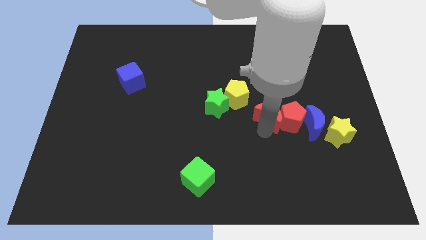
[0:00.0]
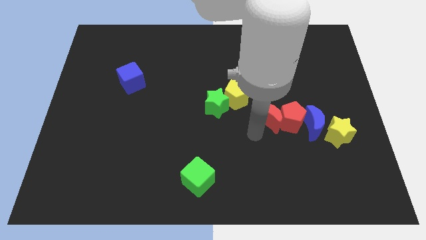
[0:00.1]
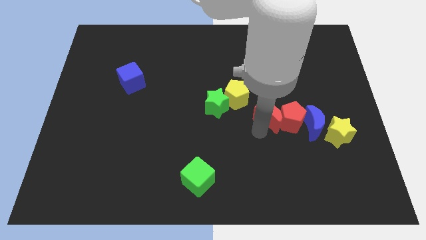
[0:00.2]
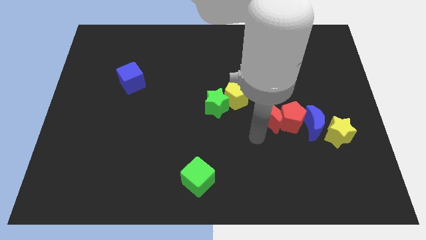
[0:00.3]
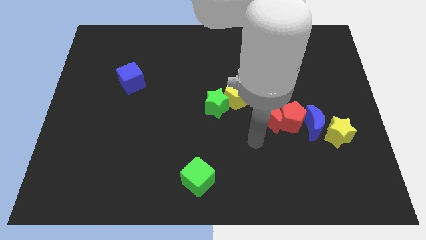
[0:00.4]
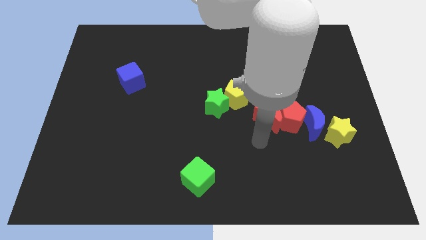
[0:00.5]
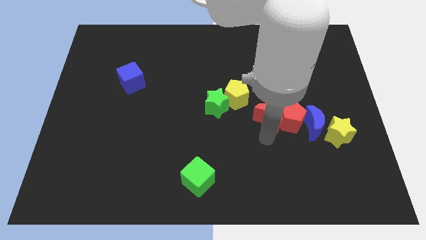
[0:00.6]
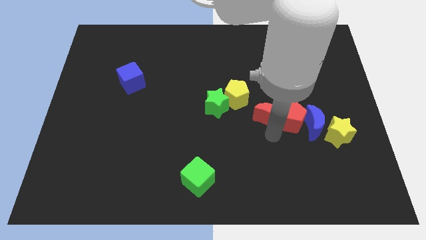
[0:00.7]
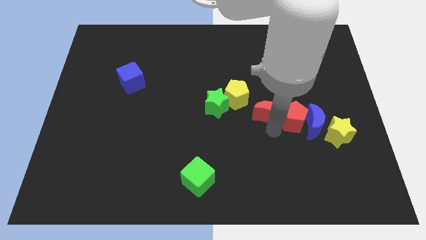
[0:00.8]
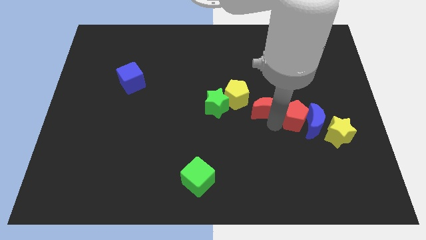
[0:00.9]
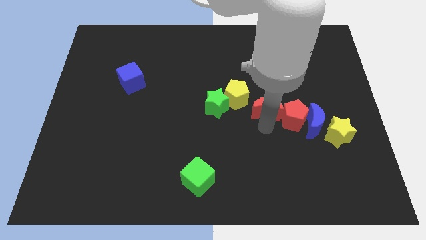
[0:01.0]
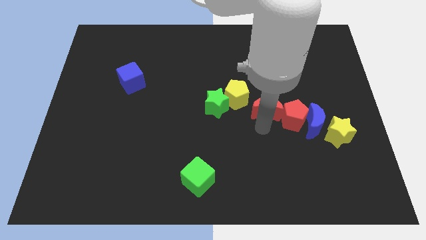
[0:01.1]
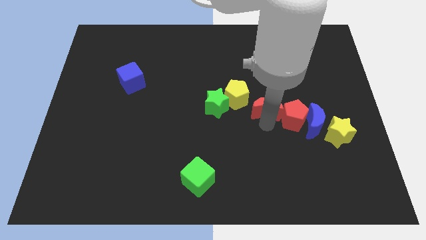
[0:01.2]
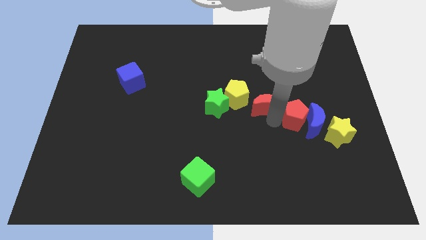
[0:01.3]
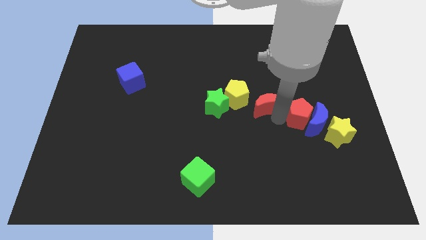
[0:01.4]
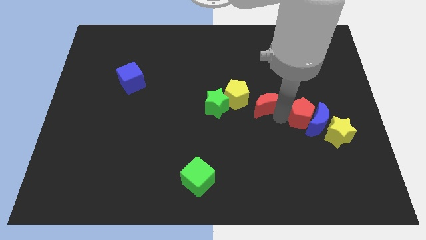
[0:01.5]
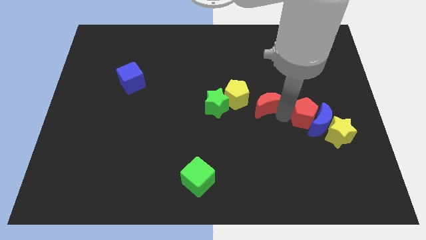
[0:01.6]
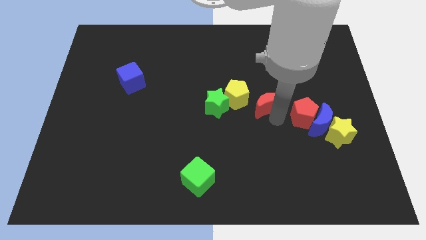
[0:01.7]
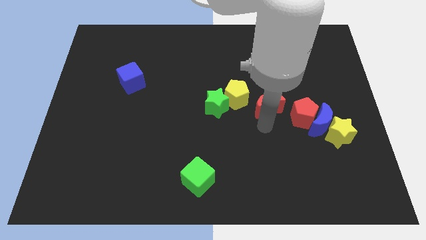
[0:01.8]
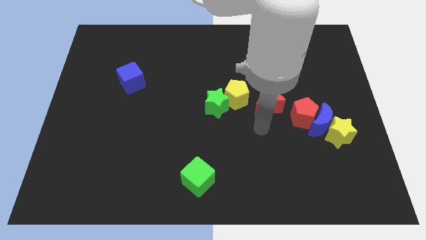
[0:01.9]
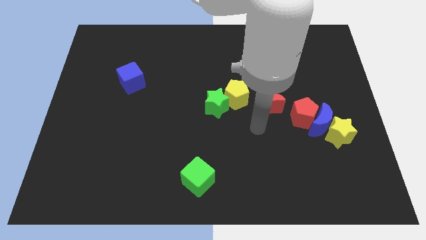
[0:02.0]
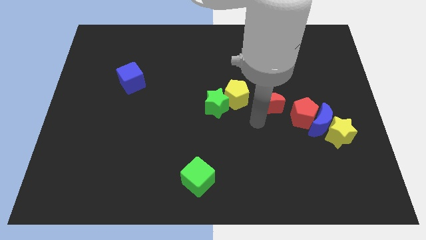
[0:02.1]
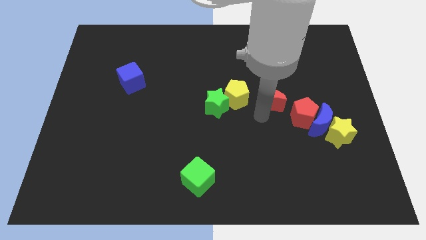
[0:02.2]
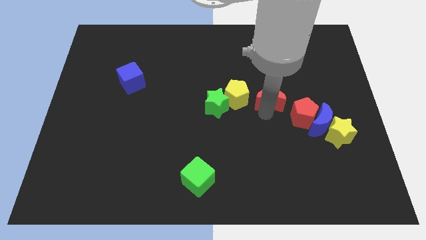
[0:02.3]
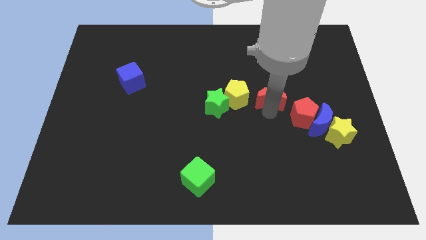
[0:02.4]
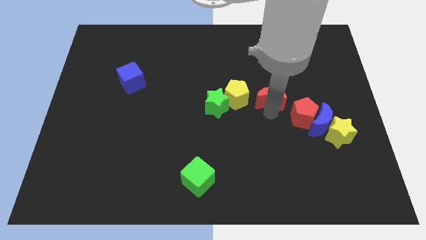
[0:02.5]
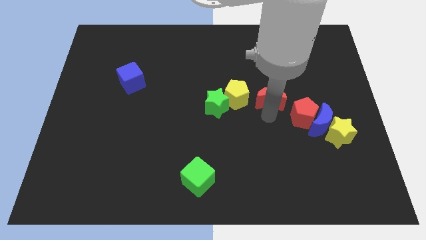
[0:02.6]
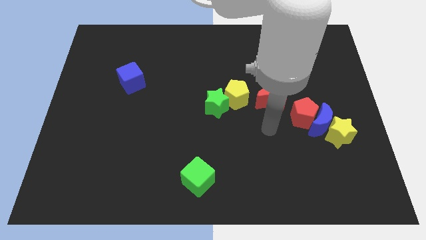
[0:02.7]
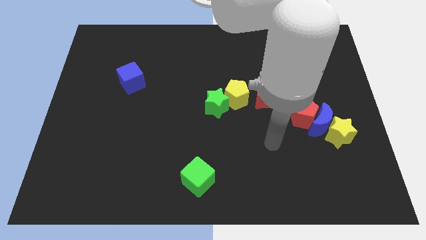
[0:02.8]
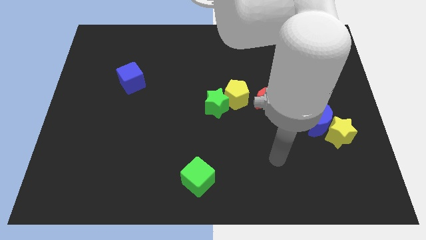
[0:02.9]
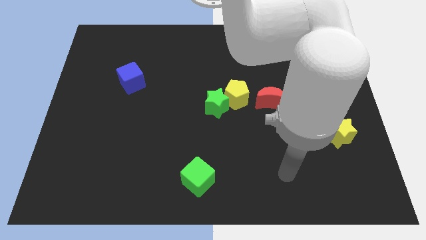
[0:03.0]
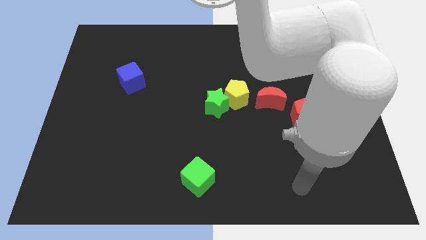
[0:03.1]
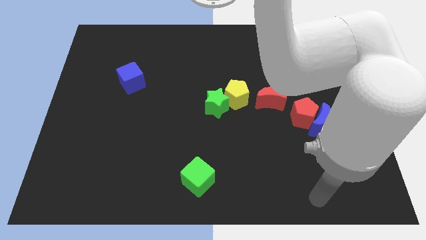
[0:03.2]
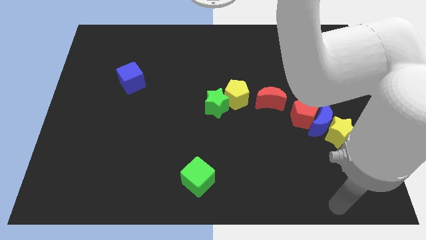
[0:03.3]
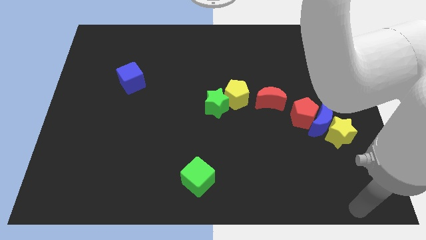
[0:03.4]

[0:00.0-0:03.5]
place the red moon diagonal to the green cube

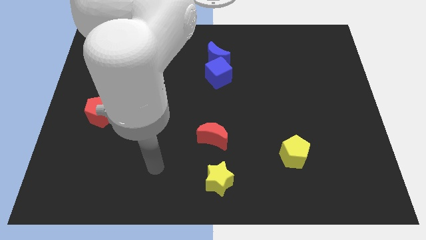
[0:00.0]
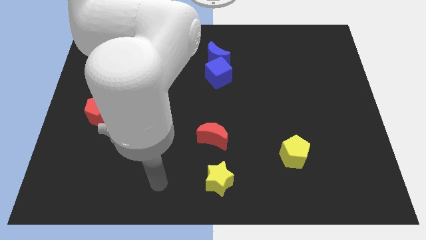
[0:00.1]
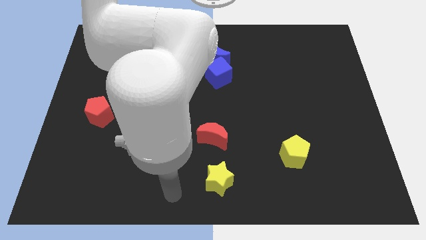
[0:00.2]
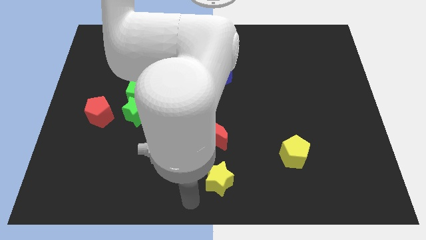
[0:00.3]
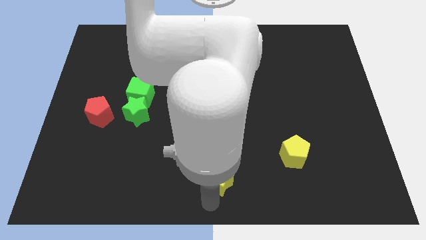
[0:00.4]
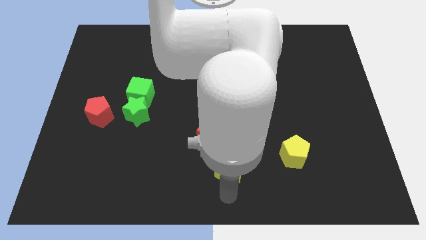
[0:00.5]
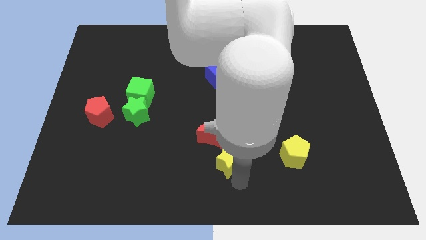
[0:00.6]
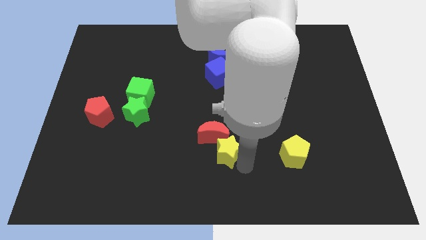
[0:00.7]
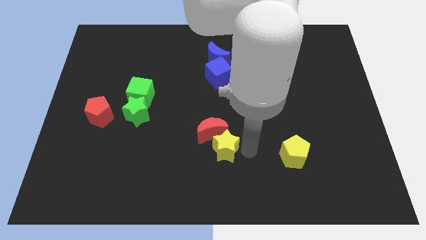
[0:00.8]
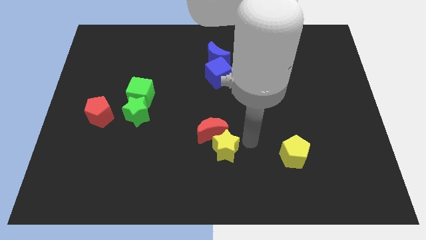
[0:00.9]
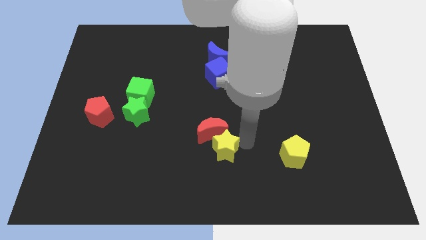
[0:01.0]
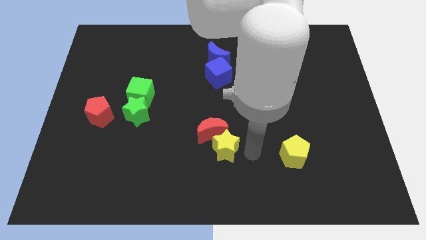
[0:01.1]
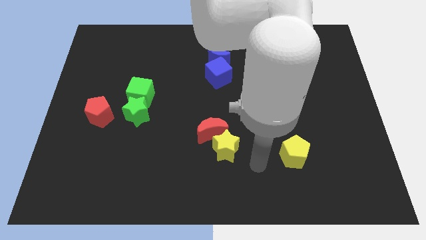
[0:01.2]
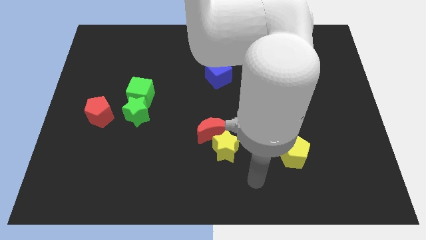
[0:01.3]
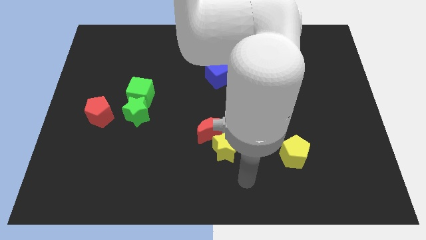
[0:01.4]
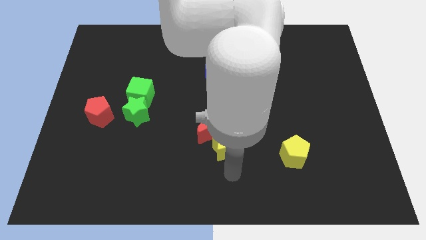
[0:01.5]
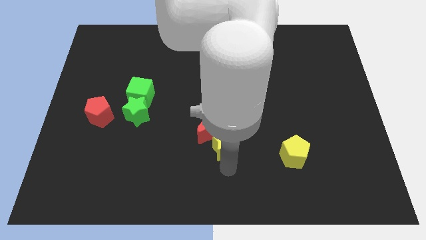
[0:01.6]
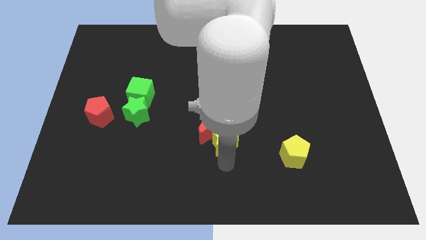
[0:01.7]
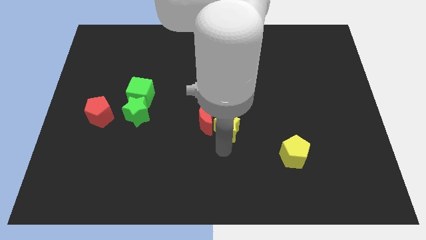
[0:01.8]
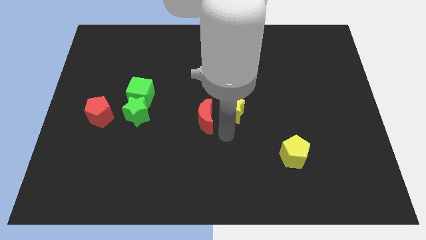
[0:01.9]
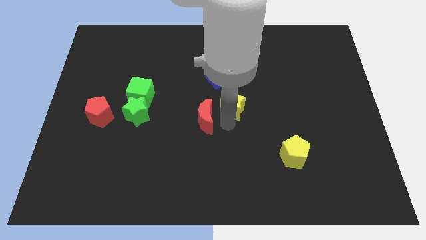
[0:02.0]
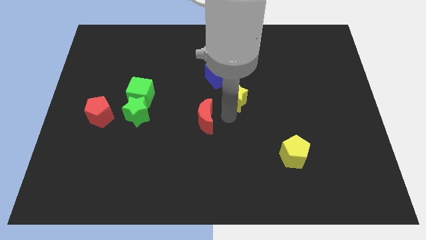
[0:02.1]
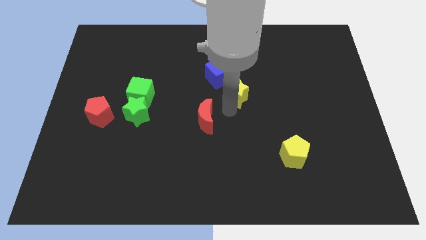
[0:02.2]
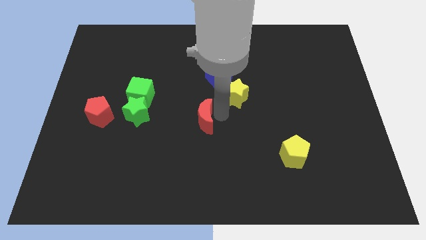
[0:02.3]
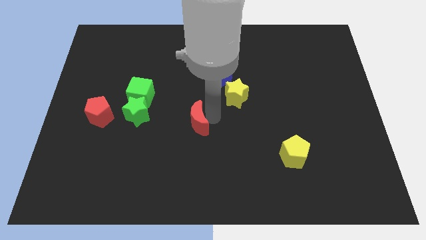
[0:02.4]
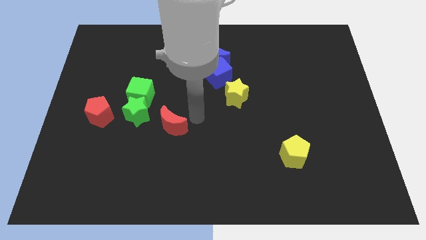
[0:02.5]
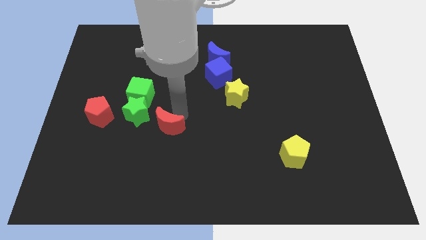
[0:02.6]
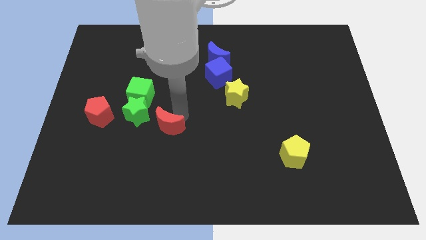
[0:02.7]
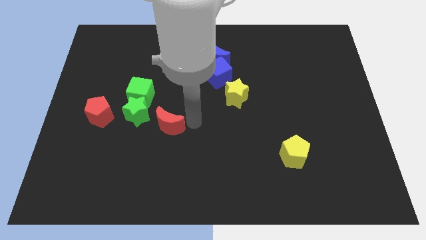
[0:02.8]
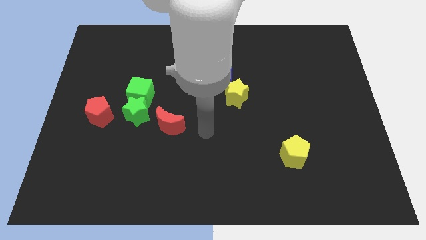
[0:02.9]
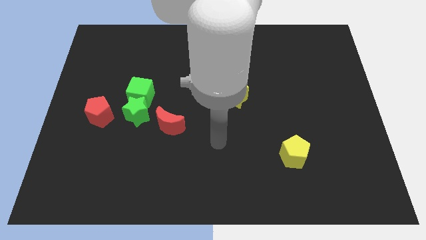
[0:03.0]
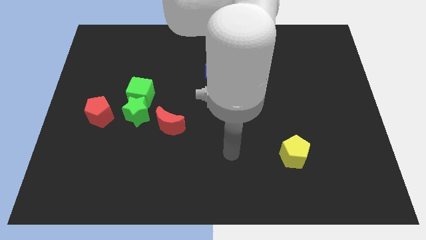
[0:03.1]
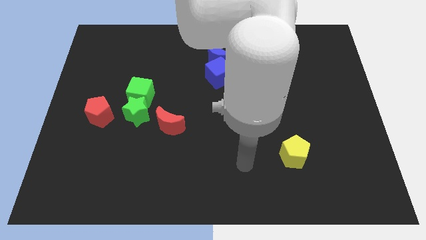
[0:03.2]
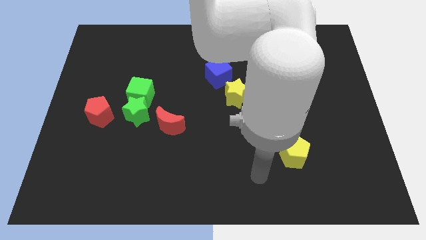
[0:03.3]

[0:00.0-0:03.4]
move yellow star below the blue block

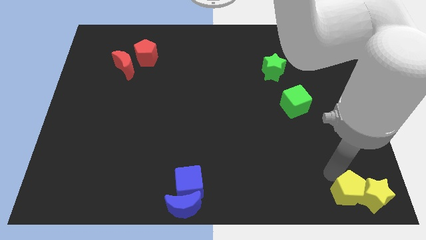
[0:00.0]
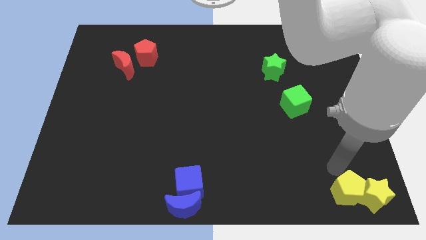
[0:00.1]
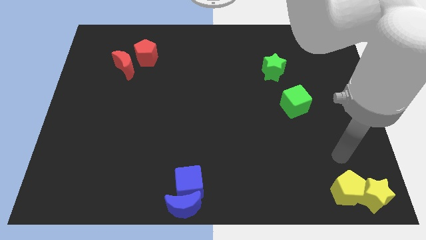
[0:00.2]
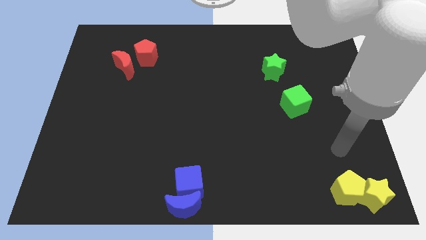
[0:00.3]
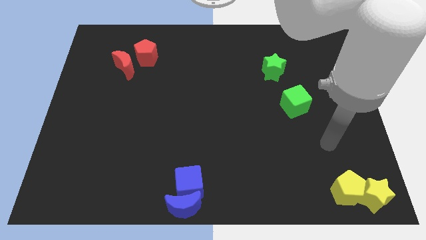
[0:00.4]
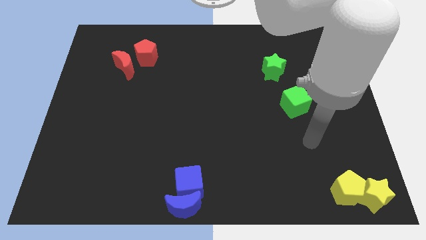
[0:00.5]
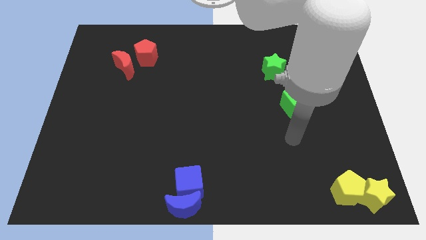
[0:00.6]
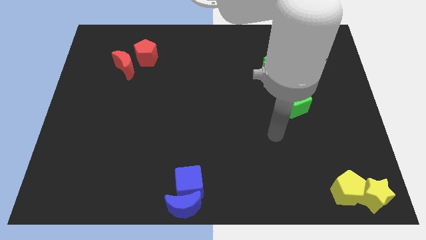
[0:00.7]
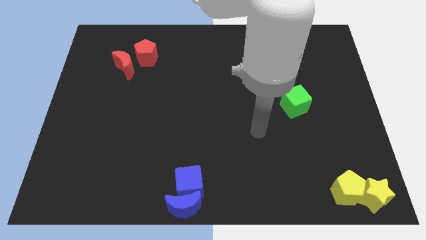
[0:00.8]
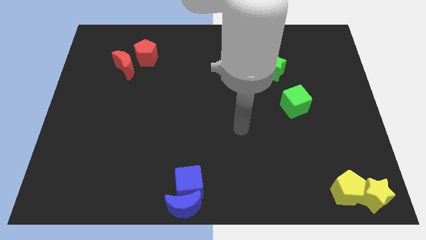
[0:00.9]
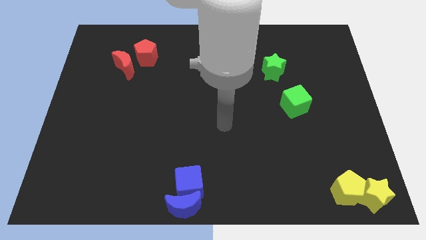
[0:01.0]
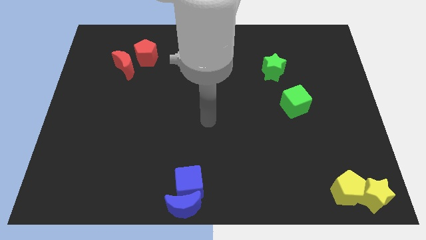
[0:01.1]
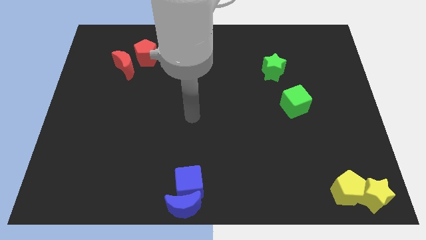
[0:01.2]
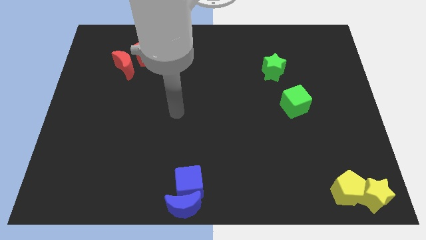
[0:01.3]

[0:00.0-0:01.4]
move your arm away from the yellow pentagon

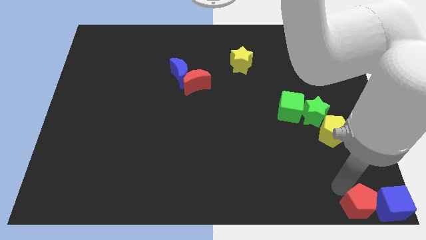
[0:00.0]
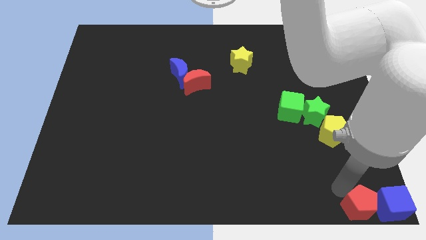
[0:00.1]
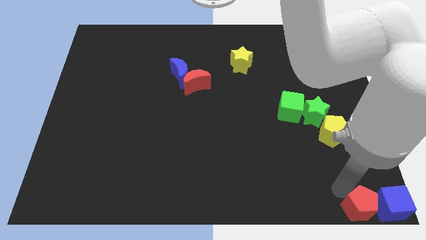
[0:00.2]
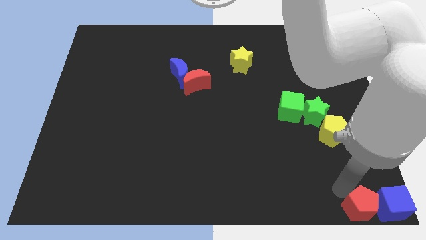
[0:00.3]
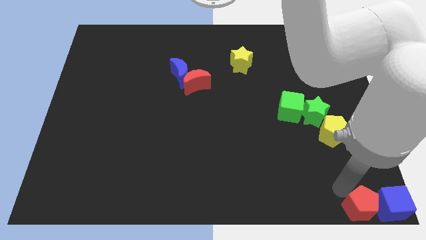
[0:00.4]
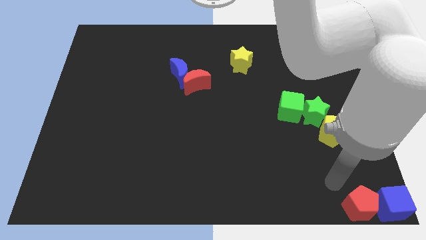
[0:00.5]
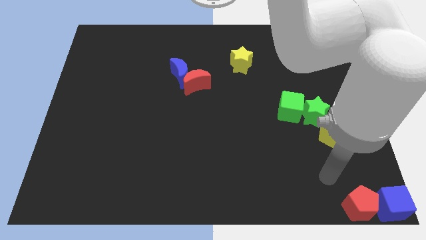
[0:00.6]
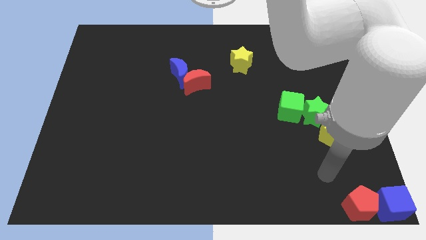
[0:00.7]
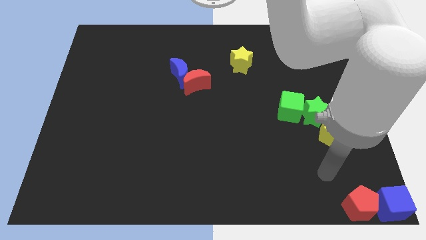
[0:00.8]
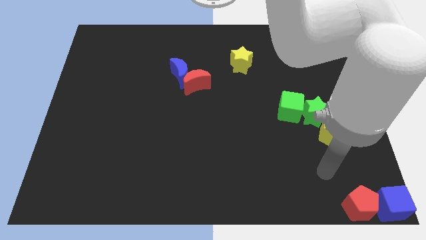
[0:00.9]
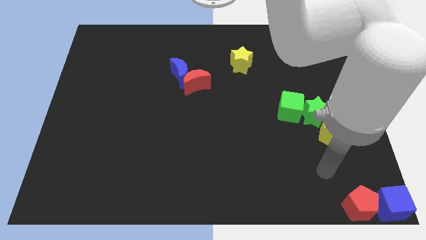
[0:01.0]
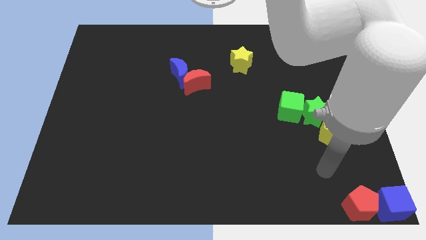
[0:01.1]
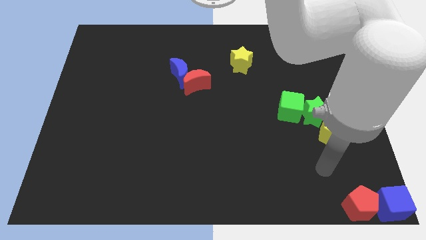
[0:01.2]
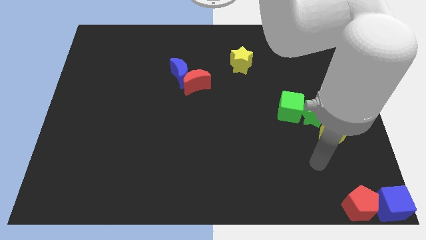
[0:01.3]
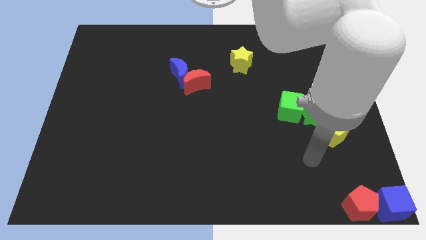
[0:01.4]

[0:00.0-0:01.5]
move your arm away from red pentagon
